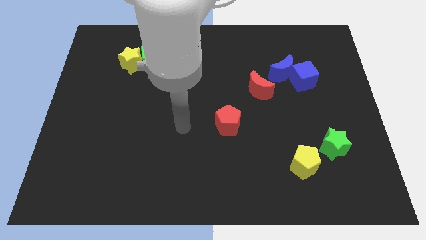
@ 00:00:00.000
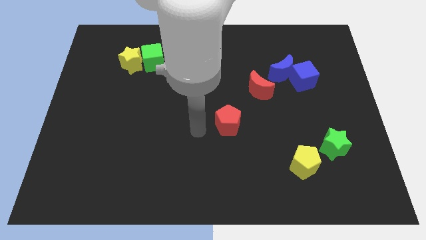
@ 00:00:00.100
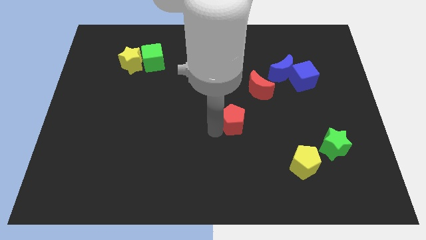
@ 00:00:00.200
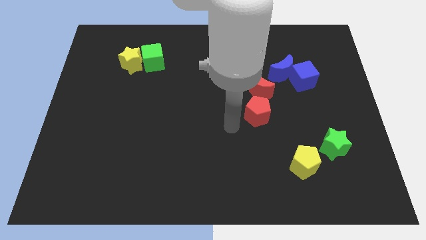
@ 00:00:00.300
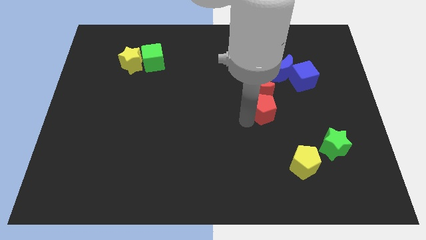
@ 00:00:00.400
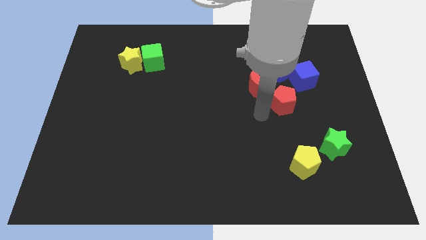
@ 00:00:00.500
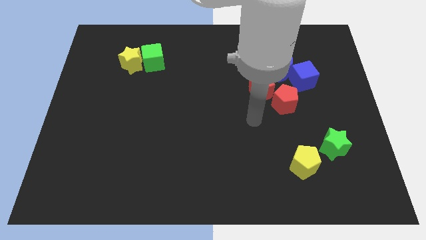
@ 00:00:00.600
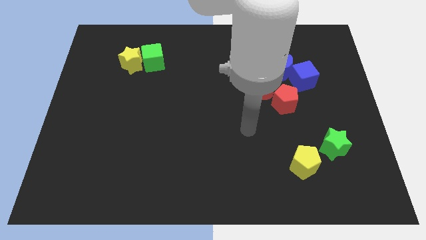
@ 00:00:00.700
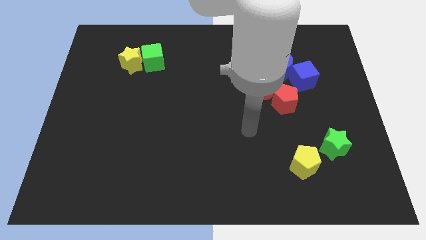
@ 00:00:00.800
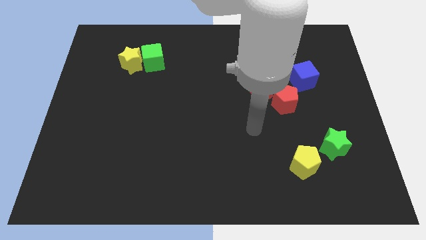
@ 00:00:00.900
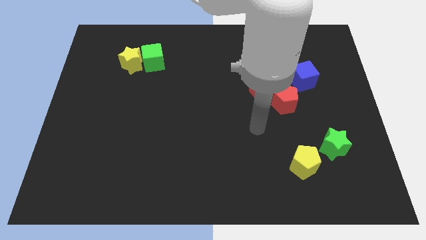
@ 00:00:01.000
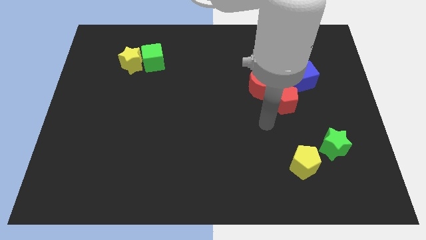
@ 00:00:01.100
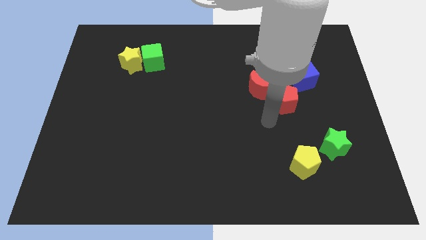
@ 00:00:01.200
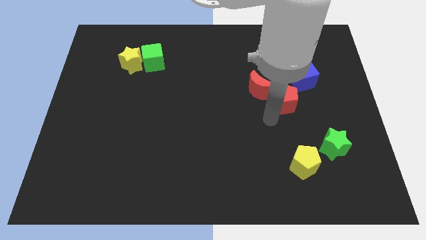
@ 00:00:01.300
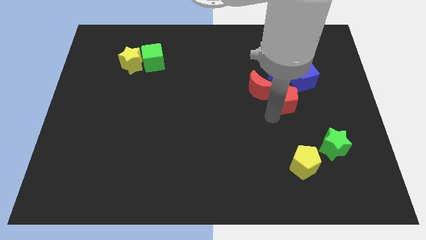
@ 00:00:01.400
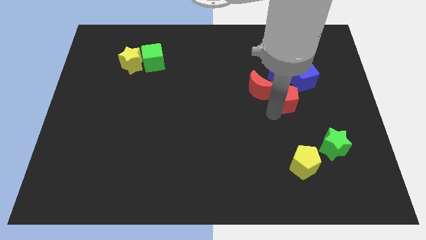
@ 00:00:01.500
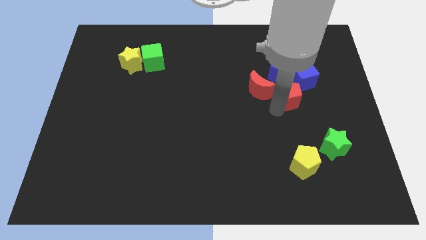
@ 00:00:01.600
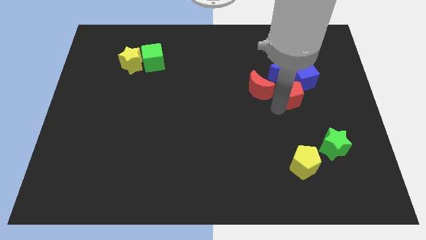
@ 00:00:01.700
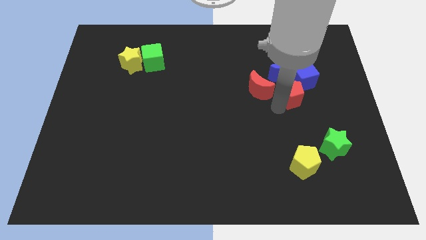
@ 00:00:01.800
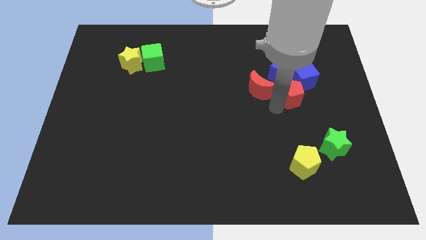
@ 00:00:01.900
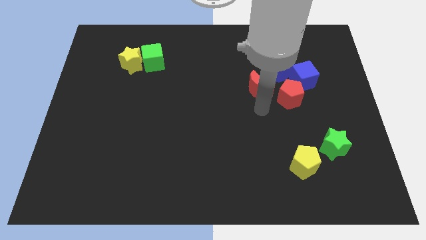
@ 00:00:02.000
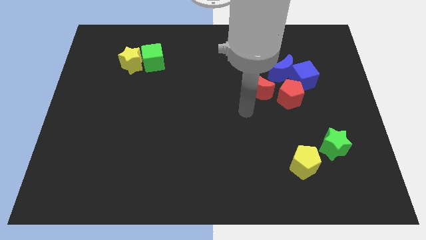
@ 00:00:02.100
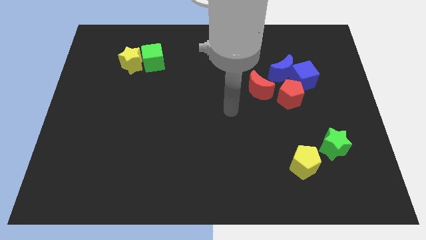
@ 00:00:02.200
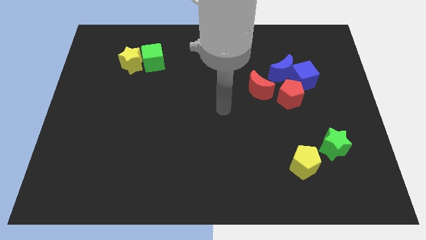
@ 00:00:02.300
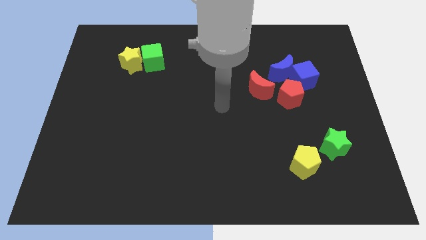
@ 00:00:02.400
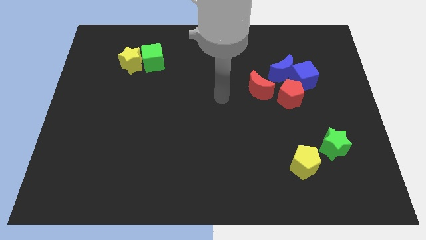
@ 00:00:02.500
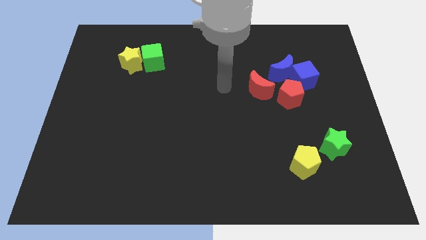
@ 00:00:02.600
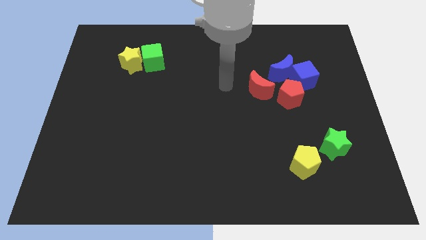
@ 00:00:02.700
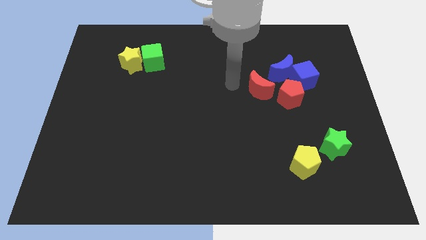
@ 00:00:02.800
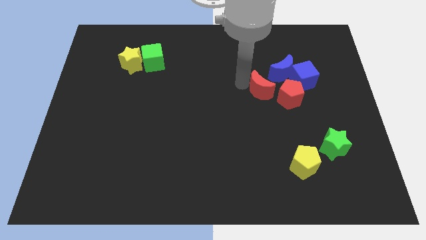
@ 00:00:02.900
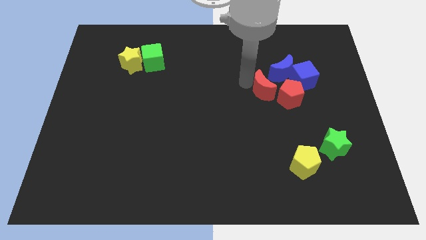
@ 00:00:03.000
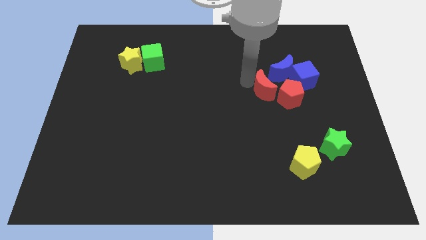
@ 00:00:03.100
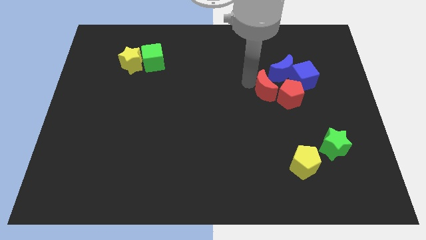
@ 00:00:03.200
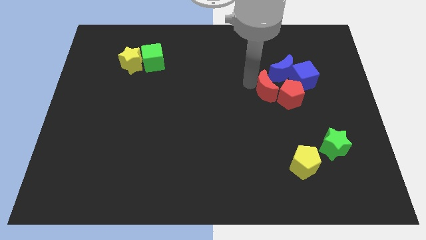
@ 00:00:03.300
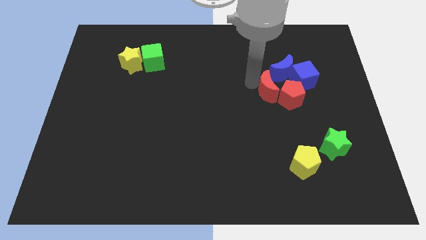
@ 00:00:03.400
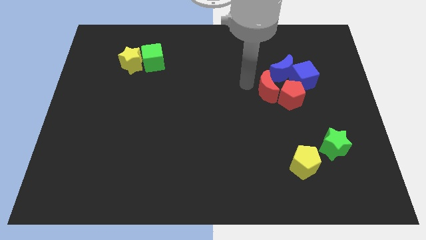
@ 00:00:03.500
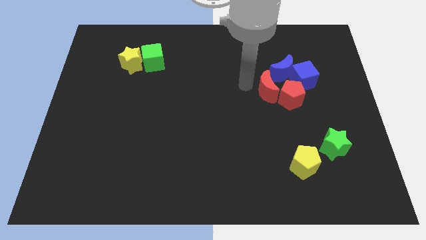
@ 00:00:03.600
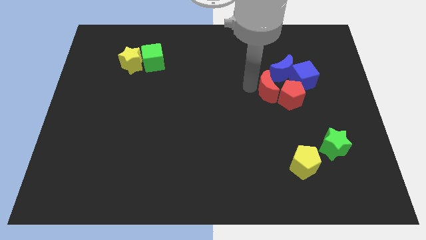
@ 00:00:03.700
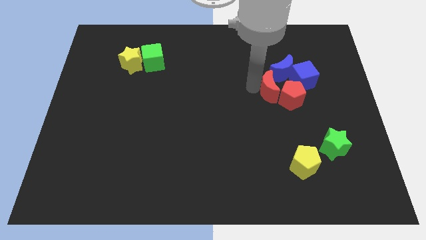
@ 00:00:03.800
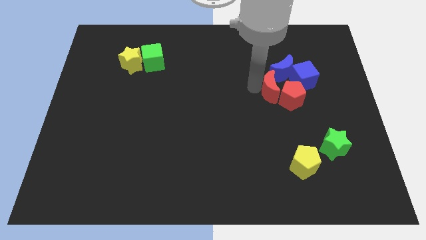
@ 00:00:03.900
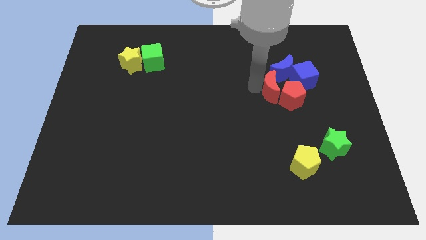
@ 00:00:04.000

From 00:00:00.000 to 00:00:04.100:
group up the red blocks with other two blue blocks at the right side of the table

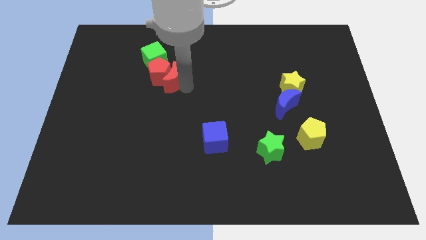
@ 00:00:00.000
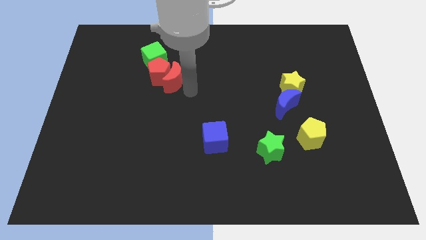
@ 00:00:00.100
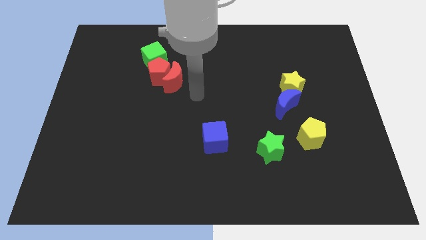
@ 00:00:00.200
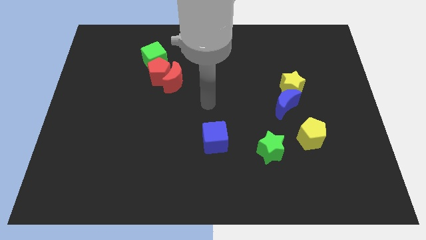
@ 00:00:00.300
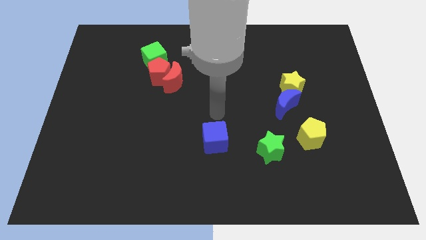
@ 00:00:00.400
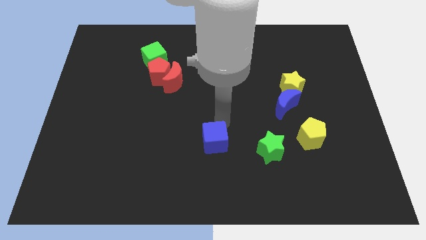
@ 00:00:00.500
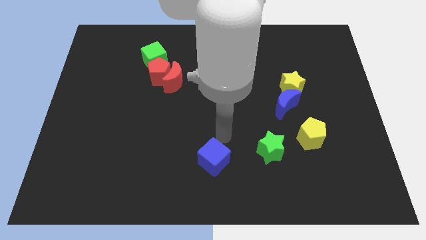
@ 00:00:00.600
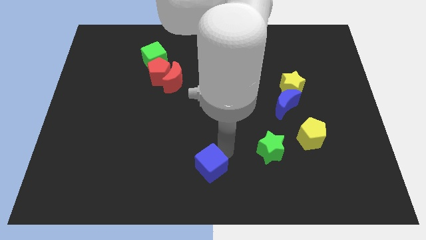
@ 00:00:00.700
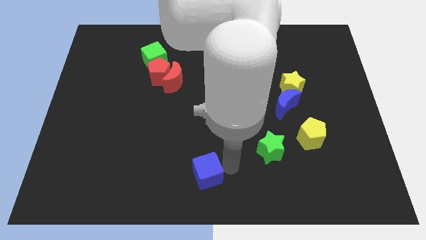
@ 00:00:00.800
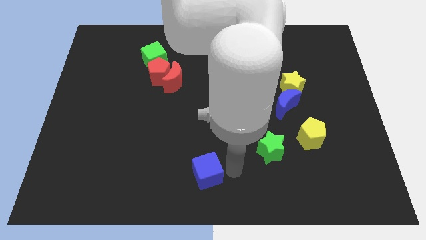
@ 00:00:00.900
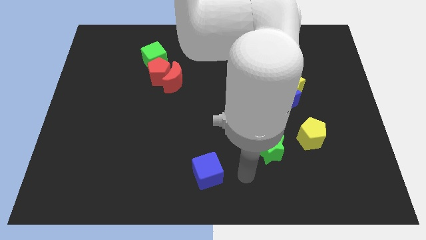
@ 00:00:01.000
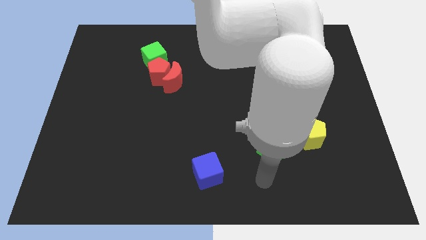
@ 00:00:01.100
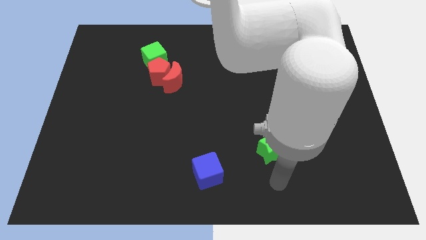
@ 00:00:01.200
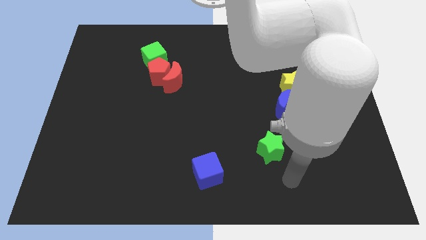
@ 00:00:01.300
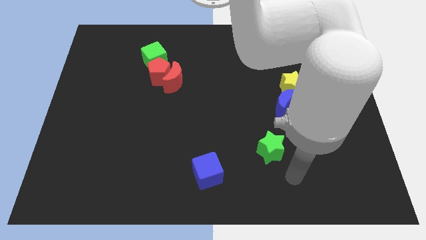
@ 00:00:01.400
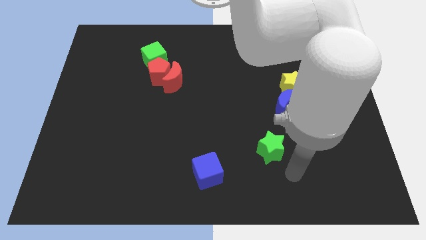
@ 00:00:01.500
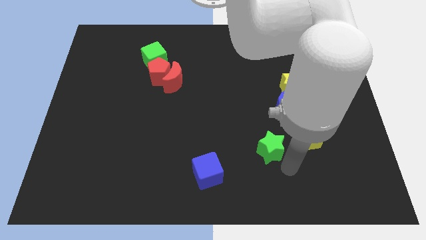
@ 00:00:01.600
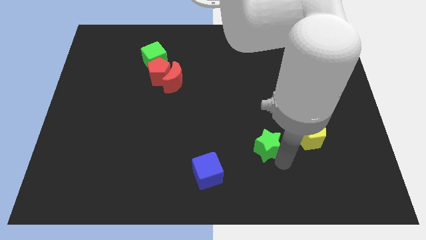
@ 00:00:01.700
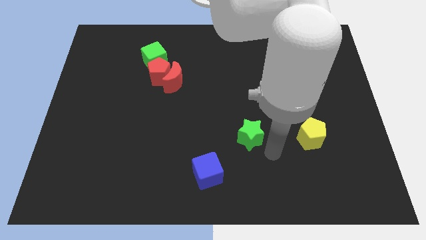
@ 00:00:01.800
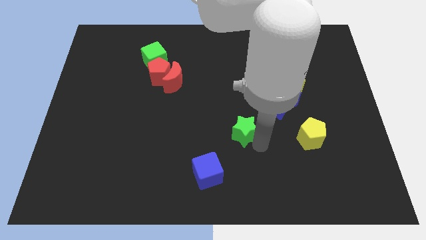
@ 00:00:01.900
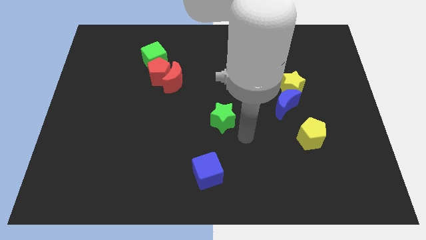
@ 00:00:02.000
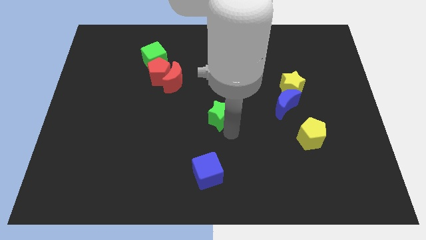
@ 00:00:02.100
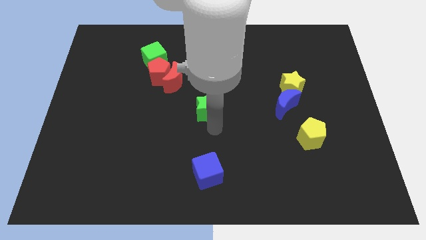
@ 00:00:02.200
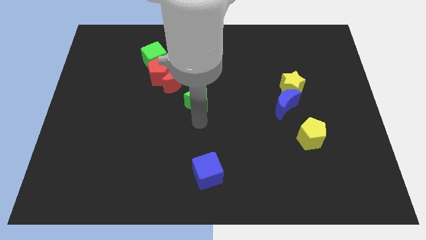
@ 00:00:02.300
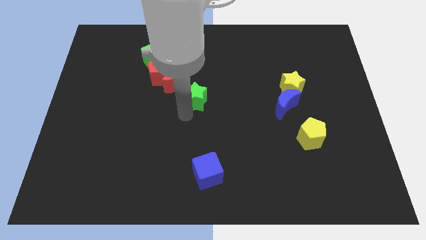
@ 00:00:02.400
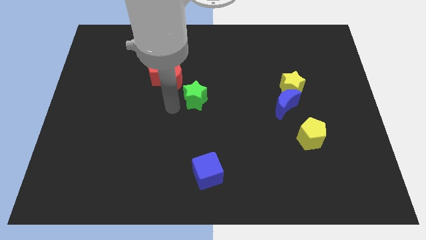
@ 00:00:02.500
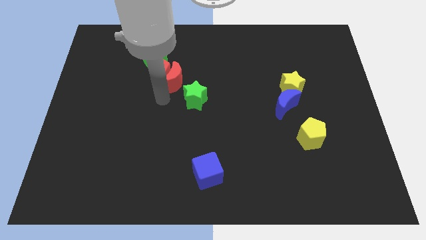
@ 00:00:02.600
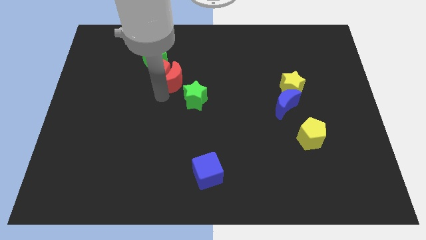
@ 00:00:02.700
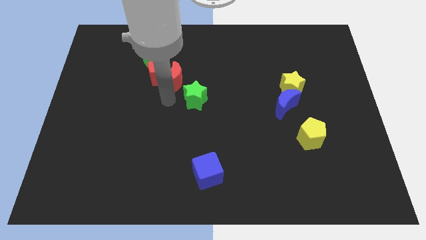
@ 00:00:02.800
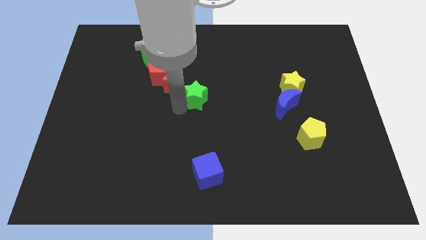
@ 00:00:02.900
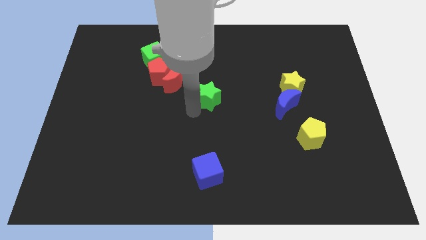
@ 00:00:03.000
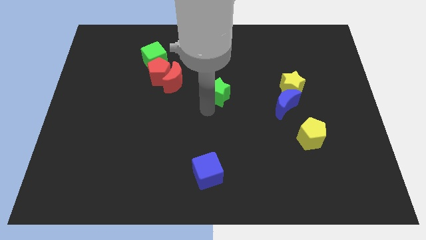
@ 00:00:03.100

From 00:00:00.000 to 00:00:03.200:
slide the green star vertically above the blue cube

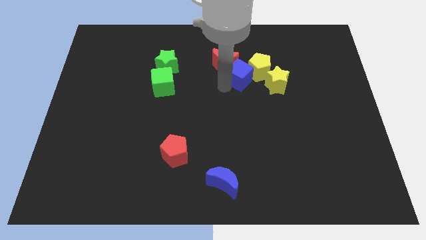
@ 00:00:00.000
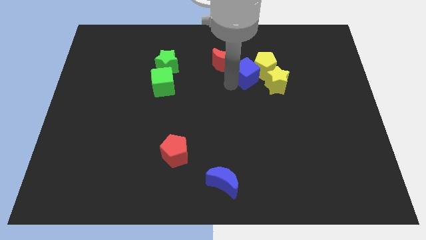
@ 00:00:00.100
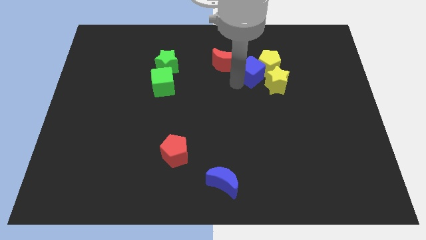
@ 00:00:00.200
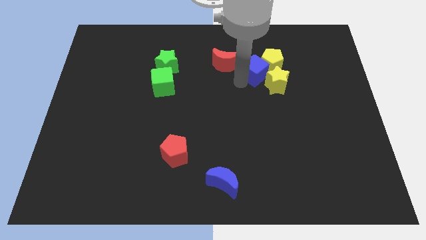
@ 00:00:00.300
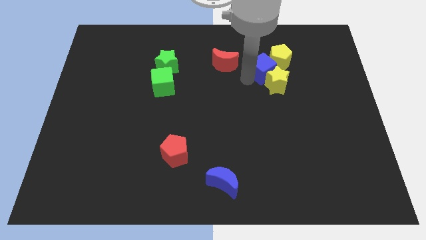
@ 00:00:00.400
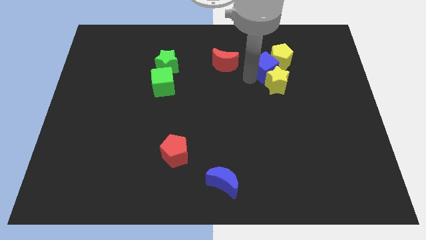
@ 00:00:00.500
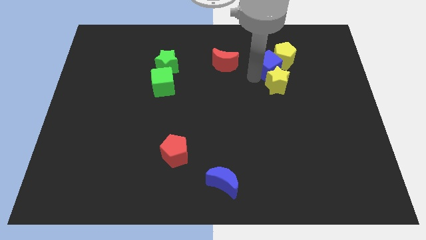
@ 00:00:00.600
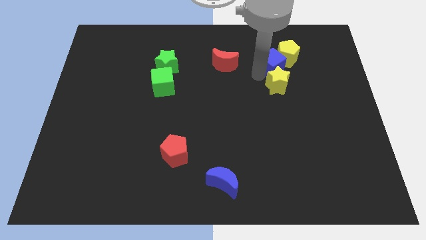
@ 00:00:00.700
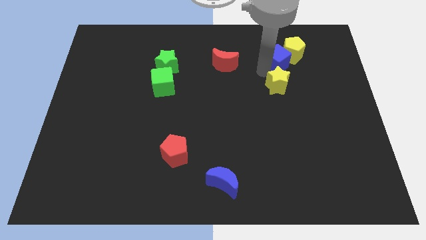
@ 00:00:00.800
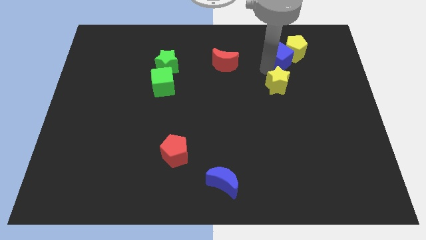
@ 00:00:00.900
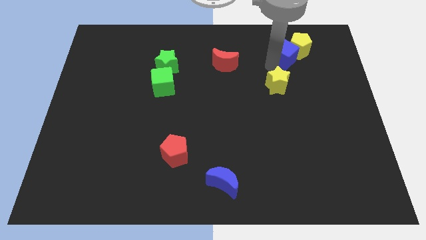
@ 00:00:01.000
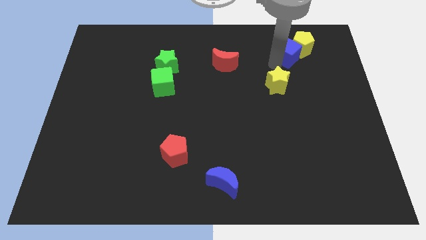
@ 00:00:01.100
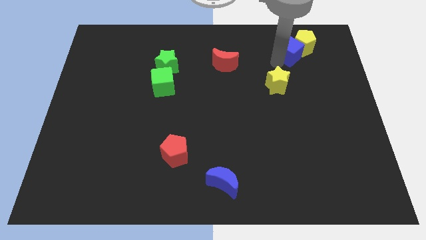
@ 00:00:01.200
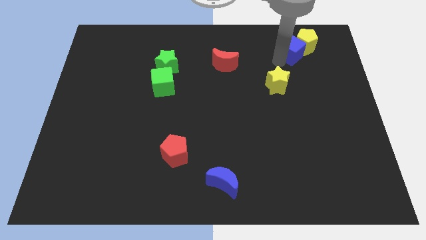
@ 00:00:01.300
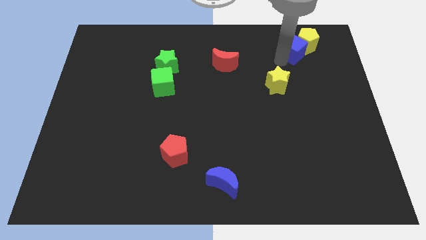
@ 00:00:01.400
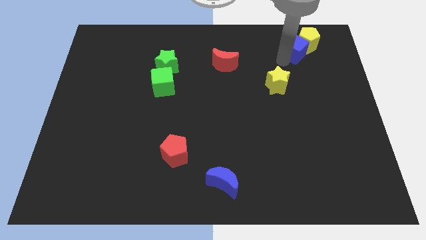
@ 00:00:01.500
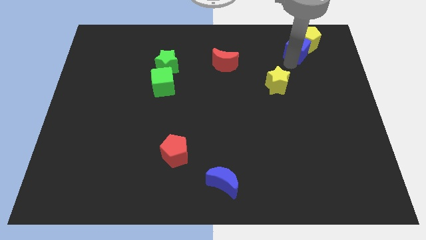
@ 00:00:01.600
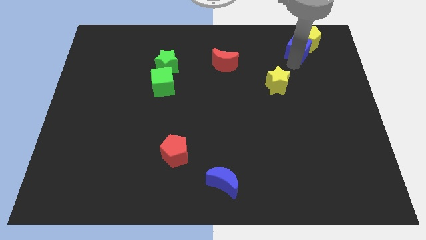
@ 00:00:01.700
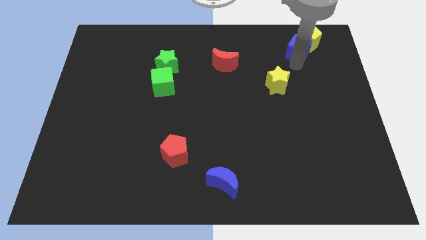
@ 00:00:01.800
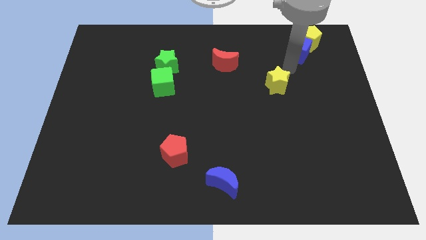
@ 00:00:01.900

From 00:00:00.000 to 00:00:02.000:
push the blue cube along with the yellow pentagon towards the top right side of the board
